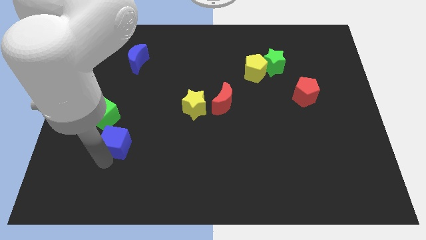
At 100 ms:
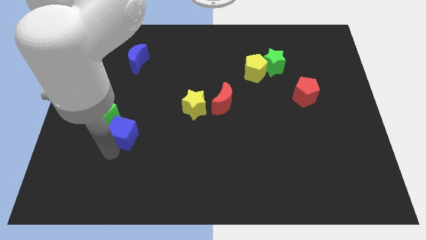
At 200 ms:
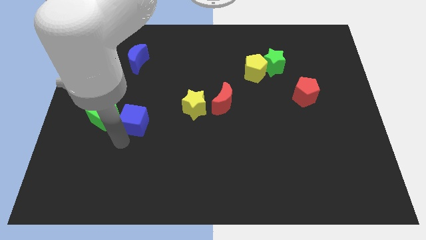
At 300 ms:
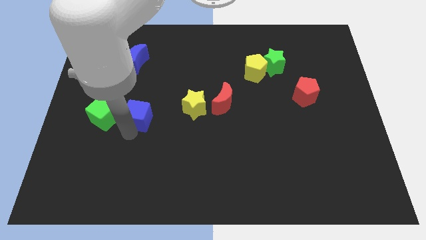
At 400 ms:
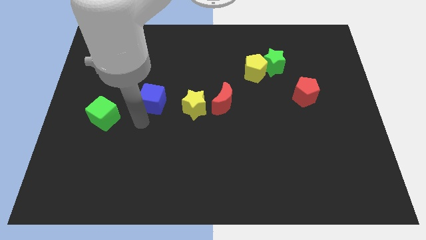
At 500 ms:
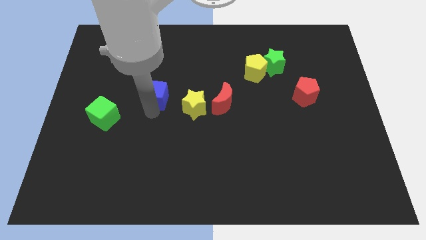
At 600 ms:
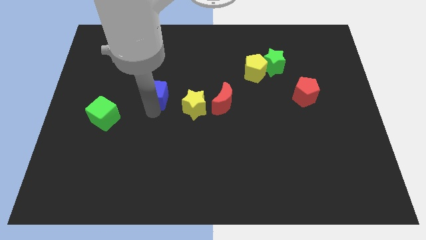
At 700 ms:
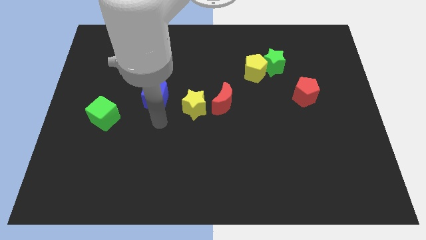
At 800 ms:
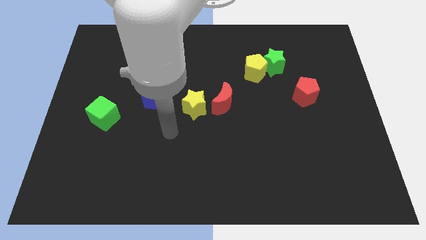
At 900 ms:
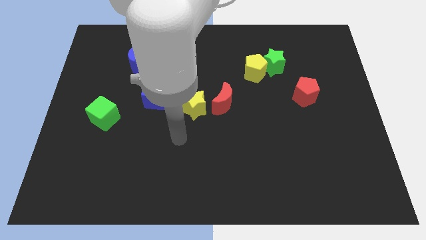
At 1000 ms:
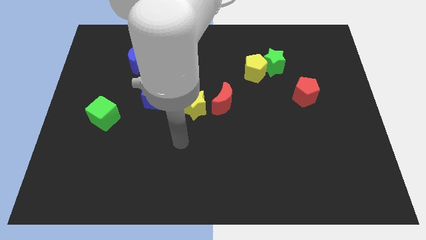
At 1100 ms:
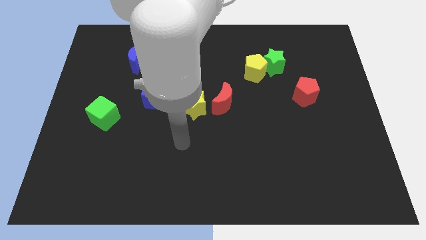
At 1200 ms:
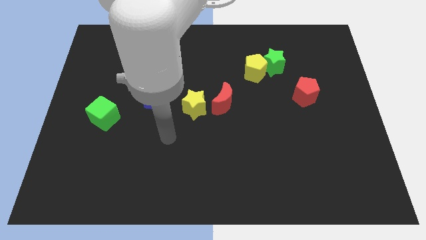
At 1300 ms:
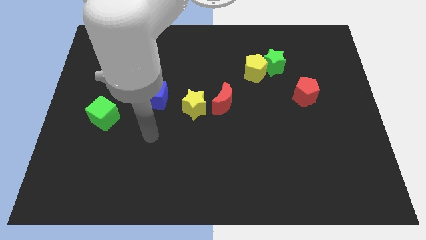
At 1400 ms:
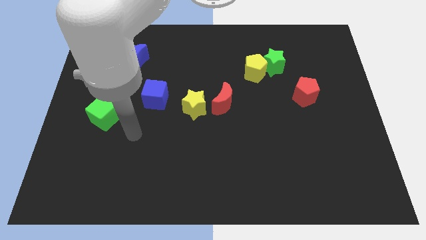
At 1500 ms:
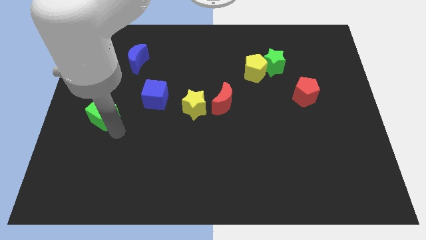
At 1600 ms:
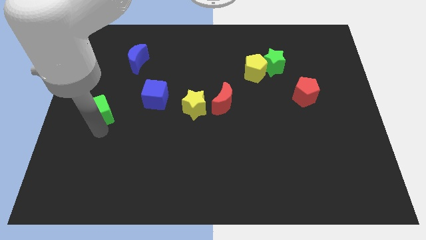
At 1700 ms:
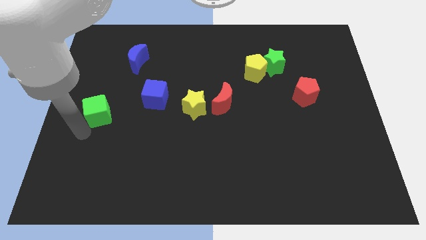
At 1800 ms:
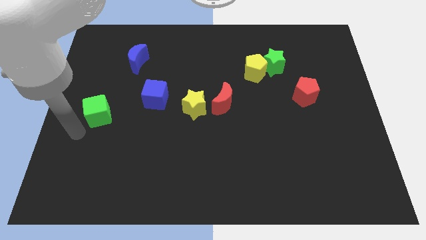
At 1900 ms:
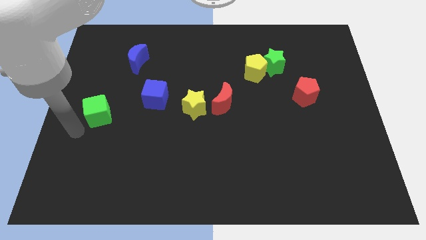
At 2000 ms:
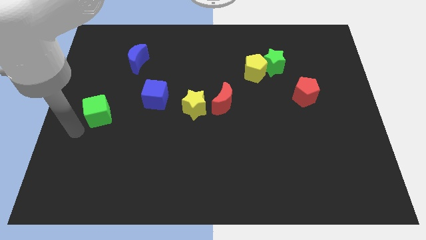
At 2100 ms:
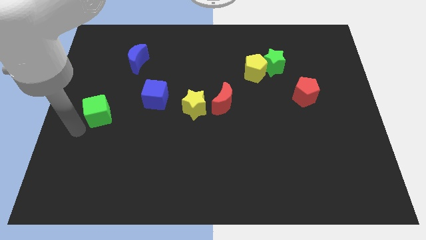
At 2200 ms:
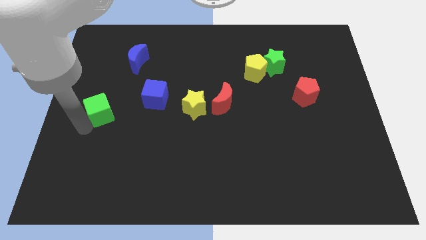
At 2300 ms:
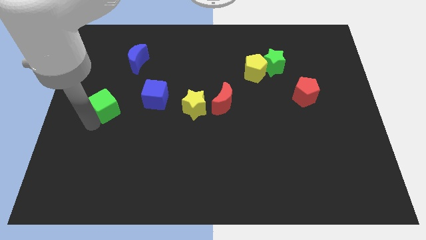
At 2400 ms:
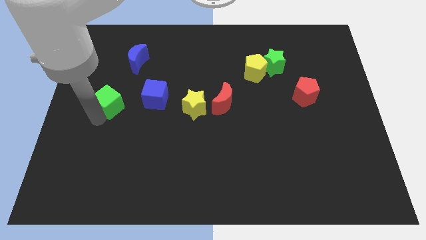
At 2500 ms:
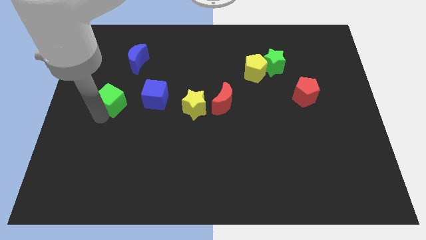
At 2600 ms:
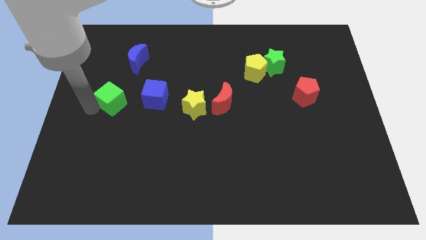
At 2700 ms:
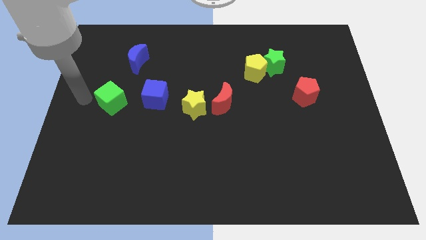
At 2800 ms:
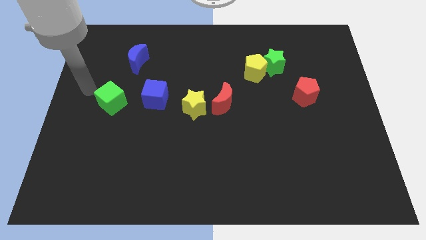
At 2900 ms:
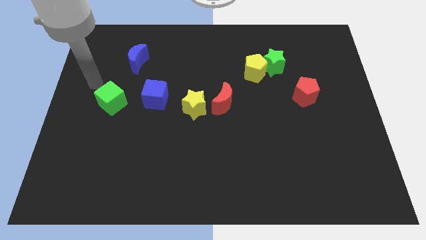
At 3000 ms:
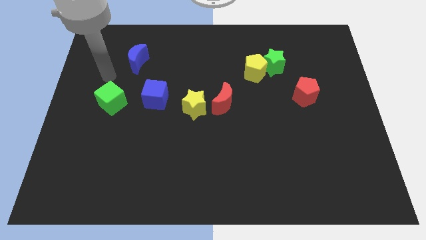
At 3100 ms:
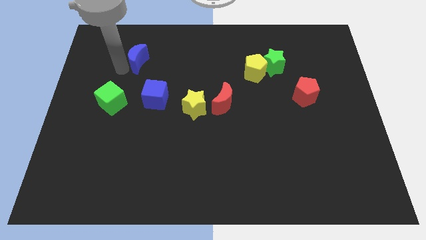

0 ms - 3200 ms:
move blue cube and green cube parallel left to the yellow star

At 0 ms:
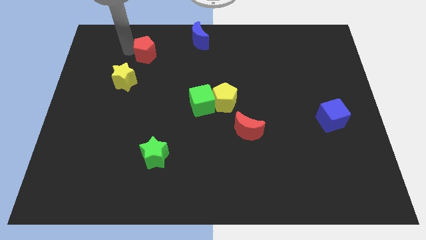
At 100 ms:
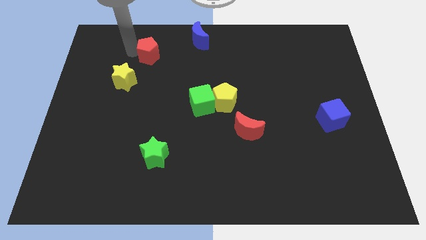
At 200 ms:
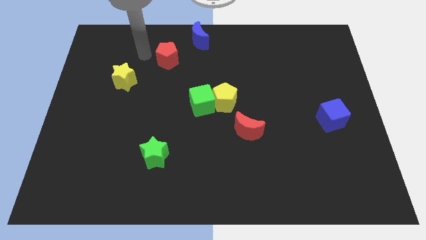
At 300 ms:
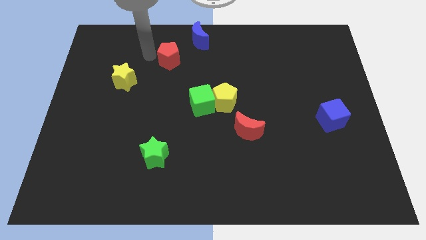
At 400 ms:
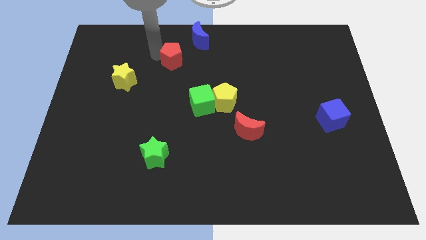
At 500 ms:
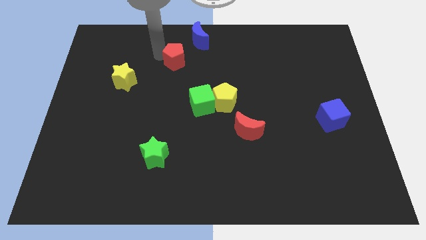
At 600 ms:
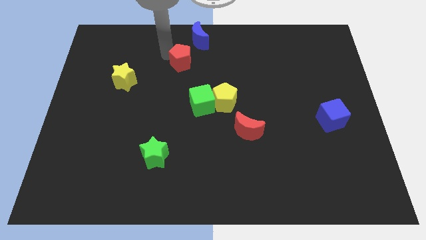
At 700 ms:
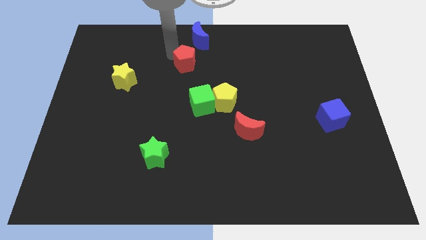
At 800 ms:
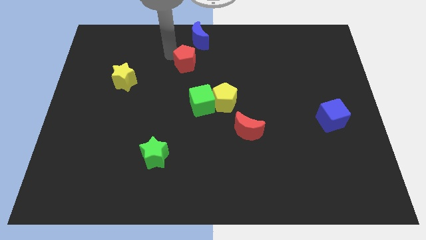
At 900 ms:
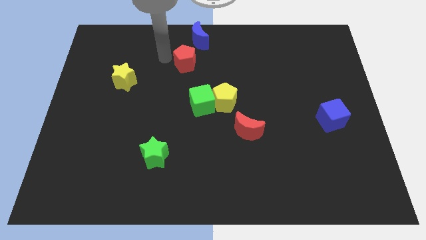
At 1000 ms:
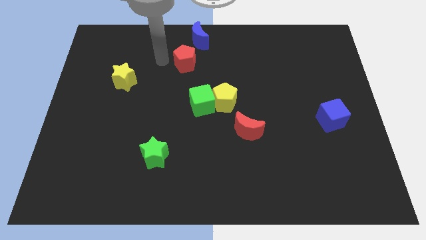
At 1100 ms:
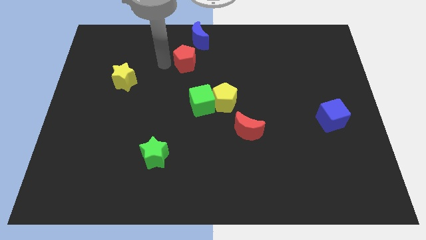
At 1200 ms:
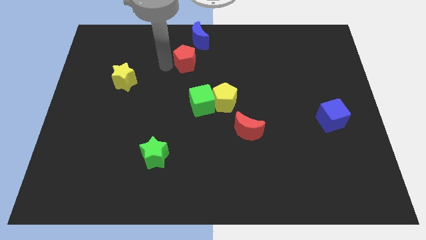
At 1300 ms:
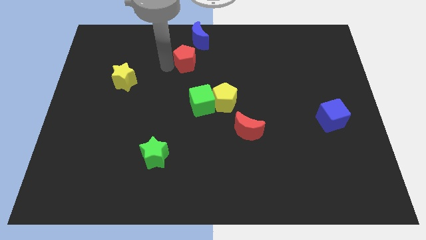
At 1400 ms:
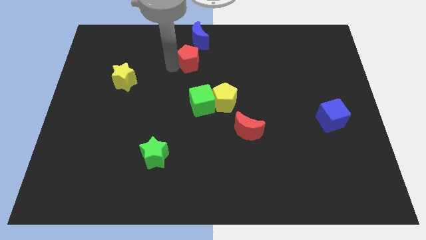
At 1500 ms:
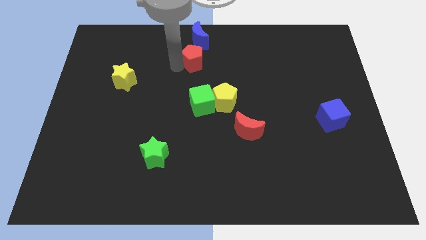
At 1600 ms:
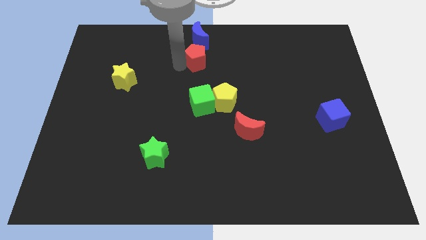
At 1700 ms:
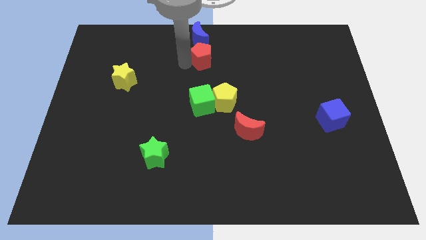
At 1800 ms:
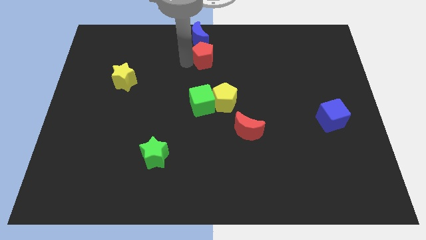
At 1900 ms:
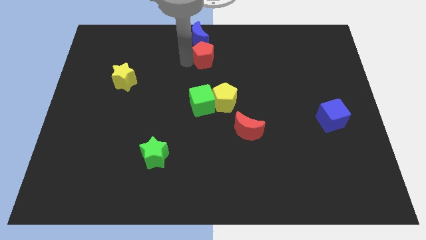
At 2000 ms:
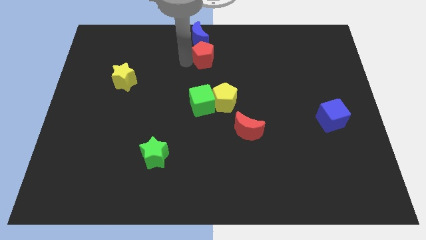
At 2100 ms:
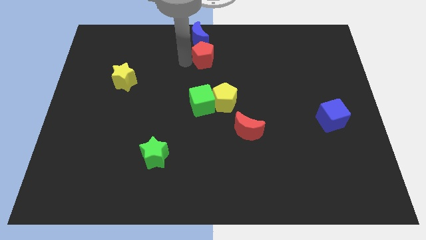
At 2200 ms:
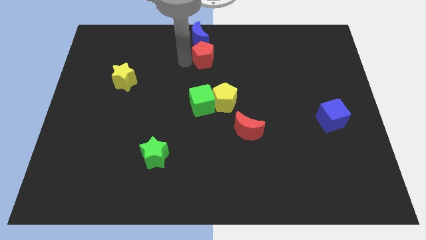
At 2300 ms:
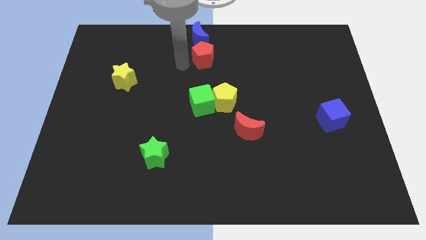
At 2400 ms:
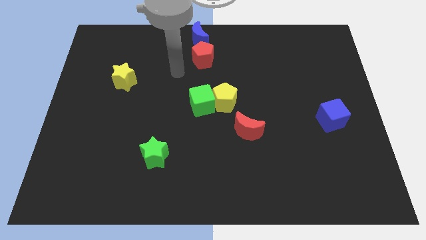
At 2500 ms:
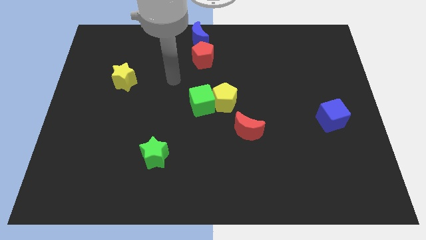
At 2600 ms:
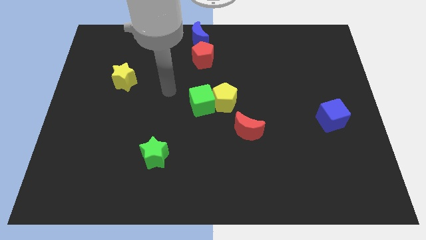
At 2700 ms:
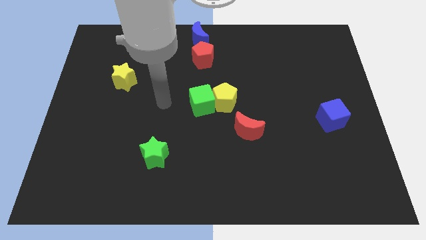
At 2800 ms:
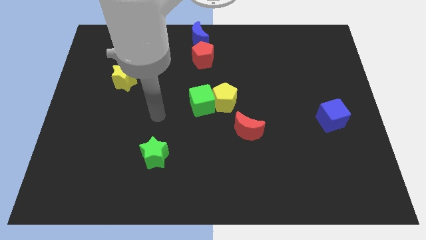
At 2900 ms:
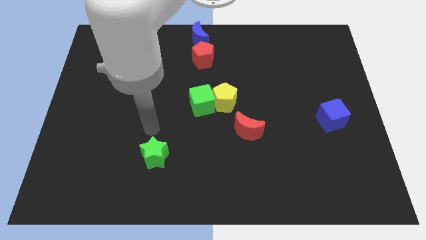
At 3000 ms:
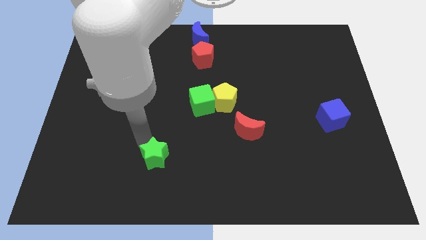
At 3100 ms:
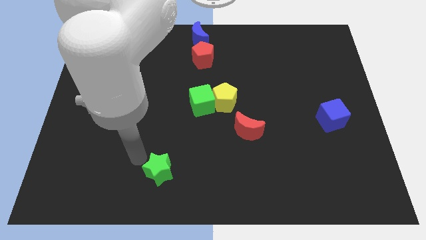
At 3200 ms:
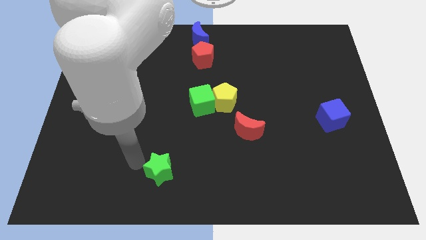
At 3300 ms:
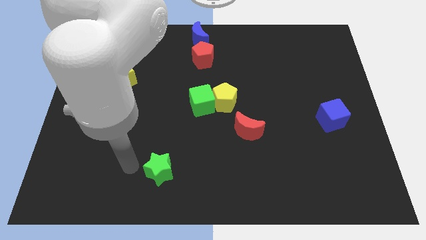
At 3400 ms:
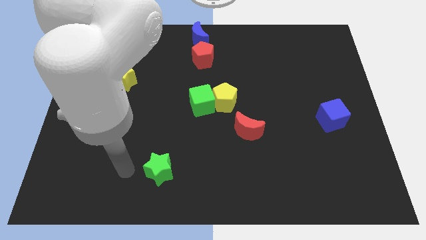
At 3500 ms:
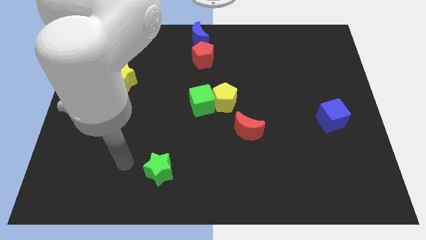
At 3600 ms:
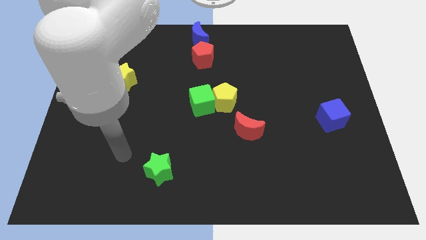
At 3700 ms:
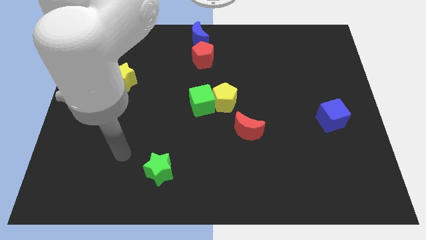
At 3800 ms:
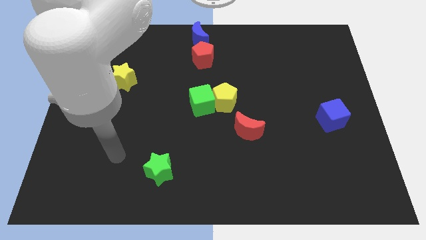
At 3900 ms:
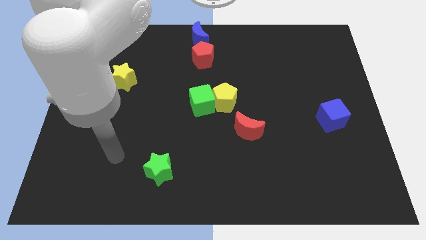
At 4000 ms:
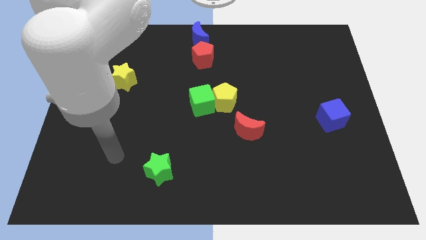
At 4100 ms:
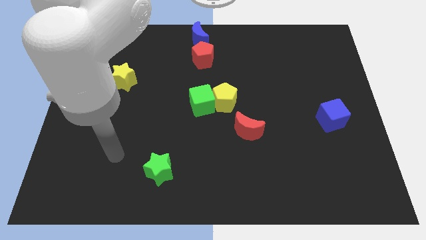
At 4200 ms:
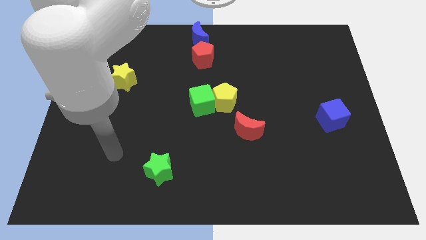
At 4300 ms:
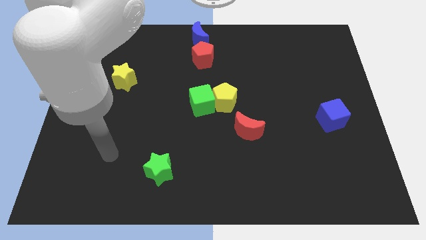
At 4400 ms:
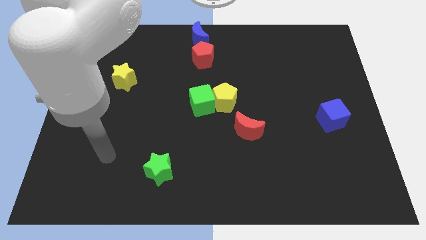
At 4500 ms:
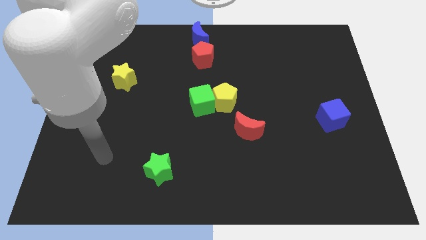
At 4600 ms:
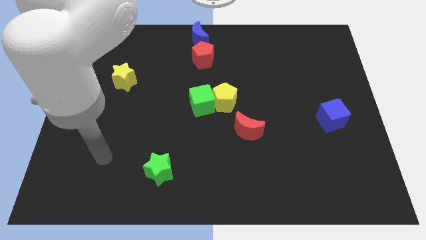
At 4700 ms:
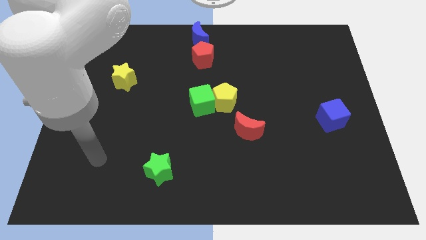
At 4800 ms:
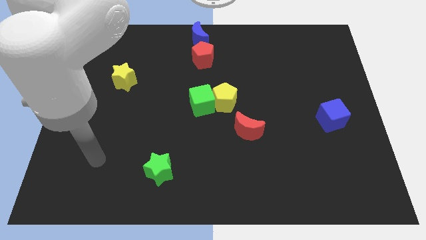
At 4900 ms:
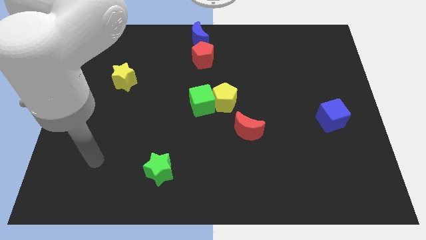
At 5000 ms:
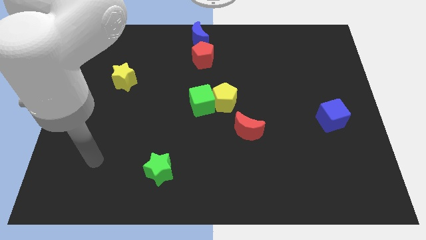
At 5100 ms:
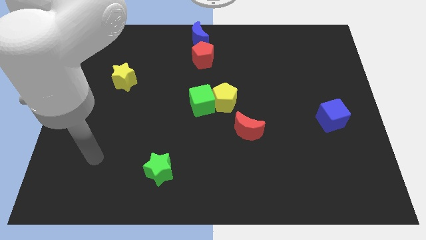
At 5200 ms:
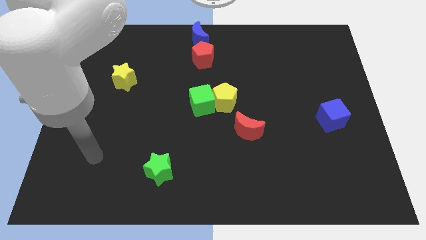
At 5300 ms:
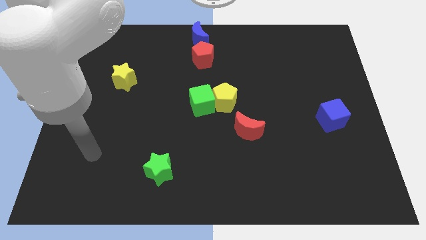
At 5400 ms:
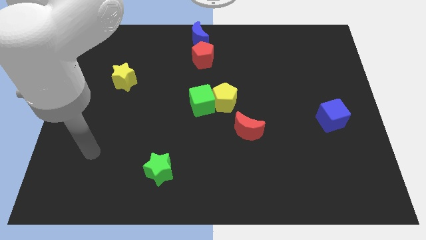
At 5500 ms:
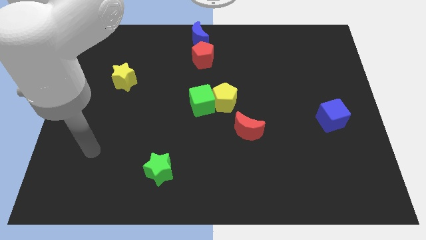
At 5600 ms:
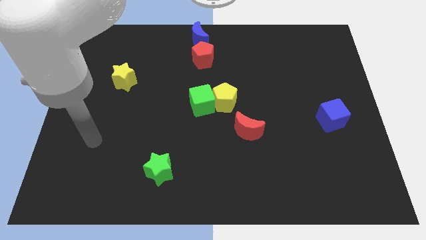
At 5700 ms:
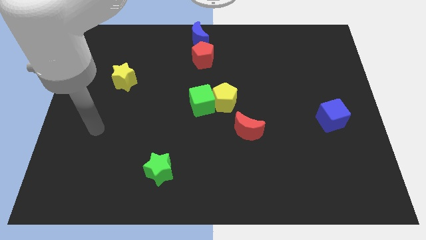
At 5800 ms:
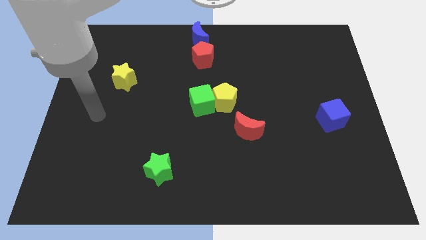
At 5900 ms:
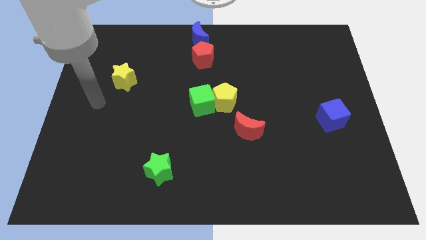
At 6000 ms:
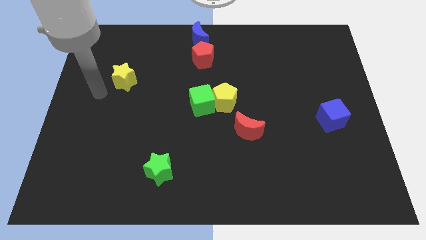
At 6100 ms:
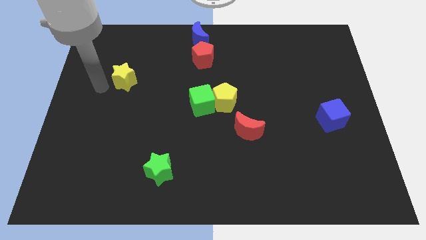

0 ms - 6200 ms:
place the red pentagon above the green cube
